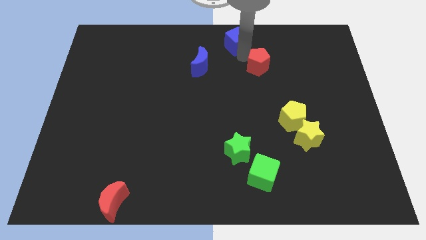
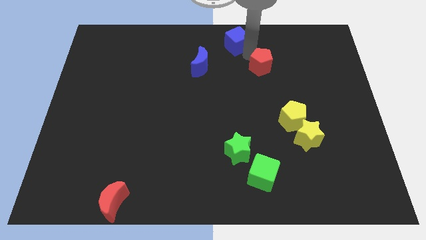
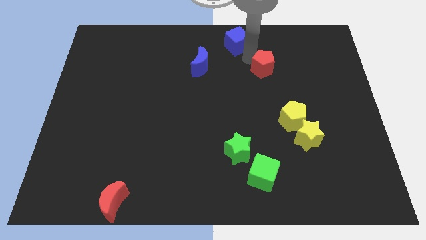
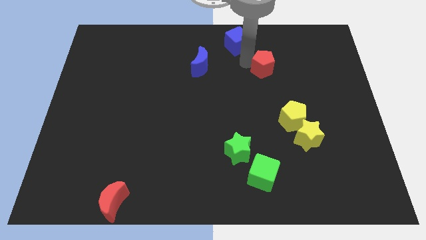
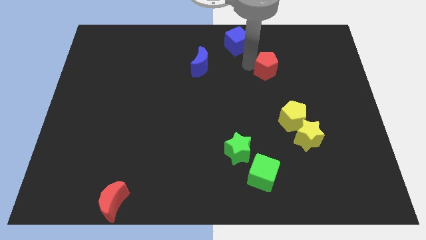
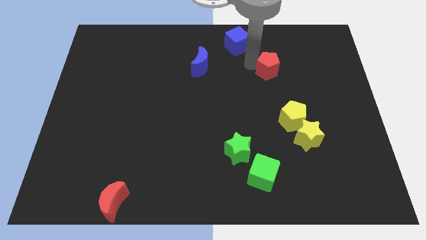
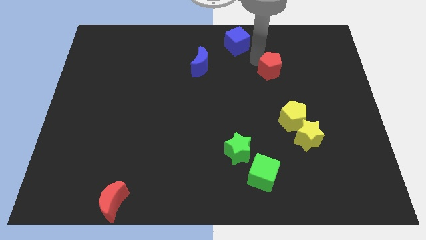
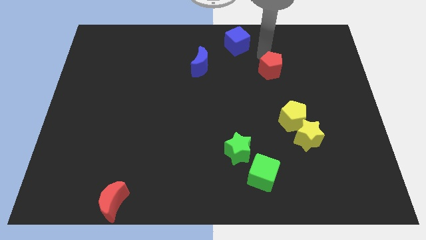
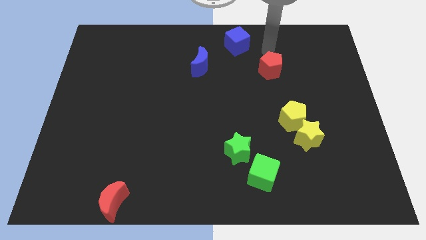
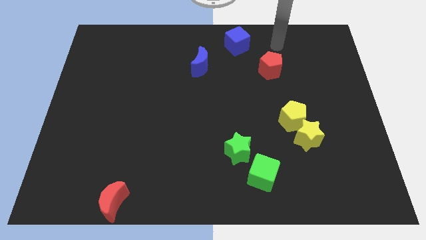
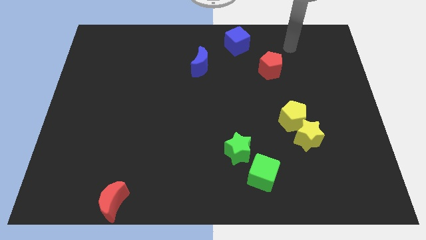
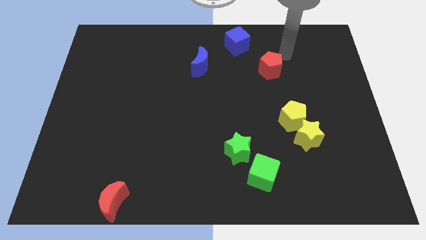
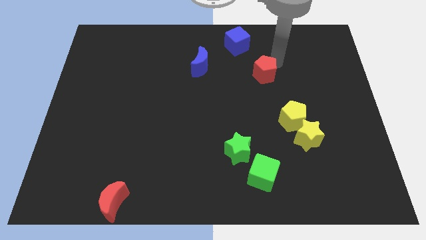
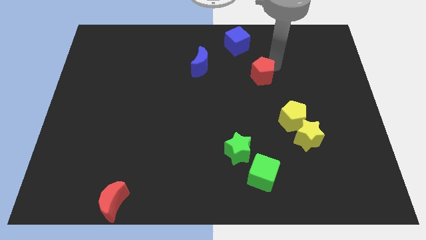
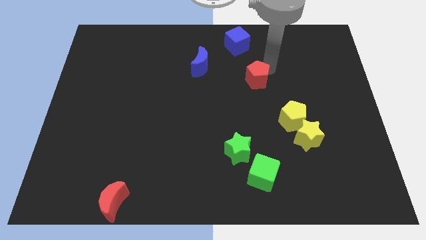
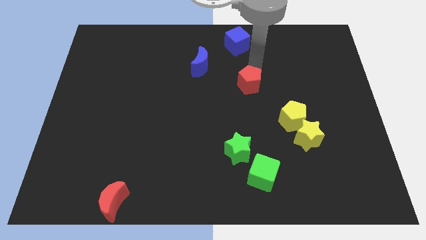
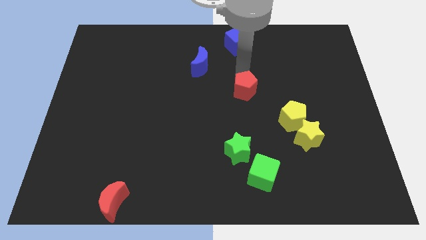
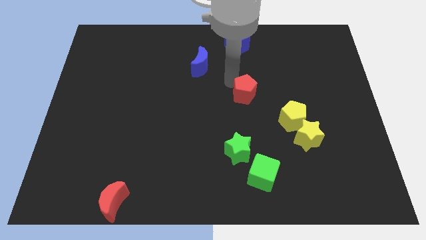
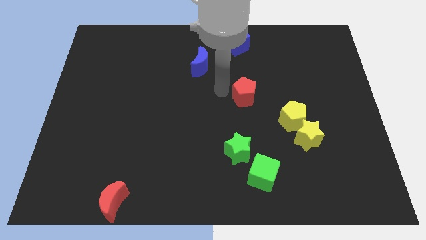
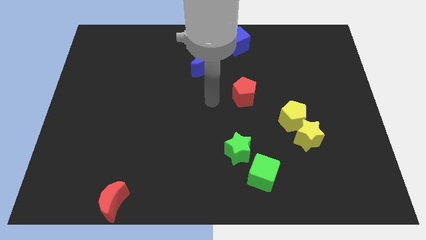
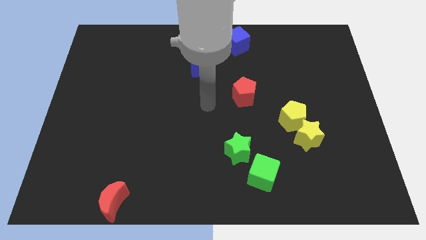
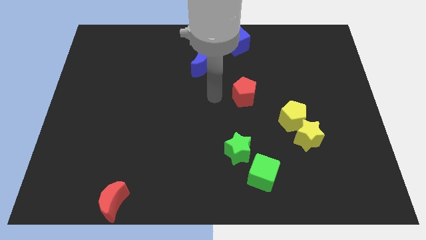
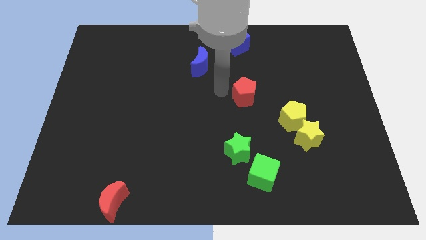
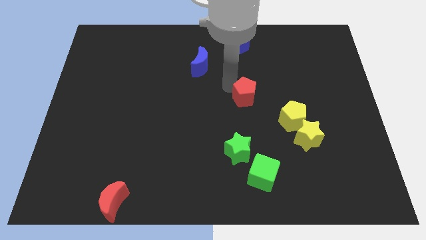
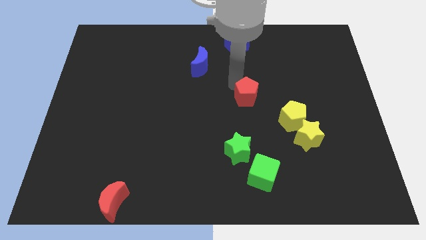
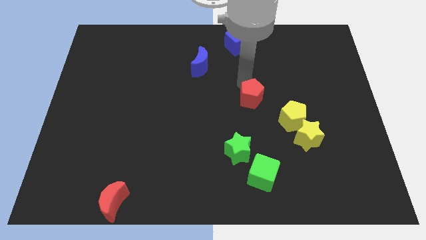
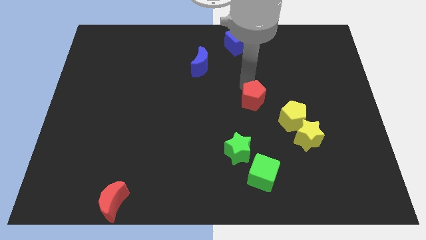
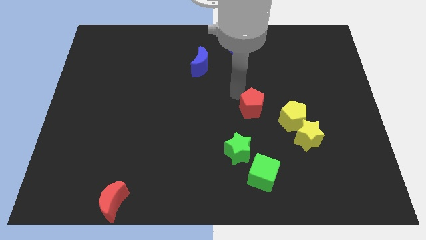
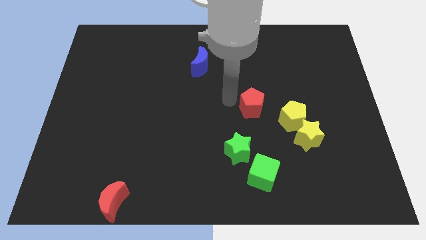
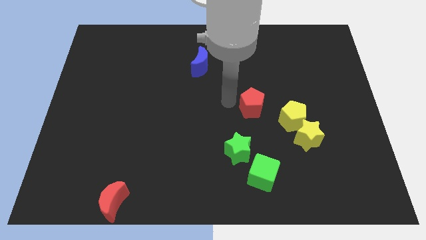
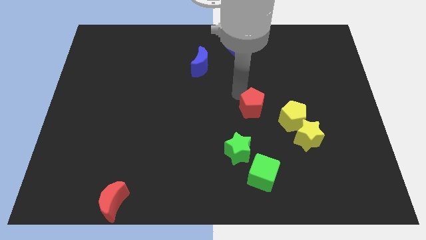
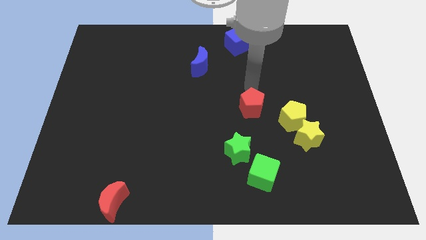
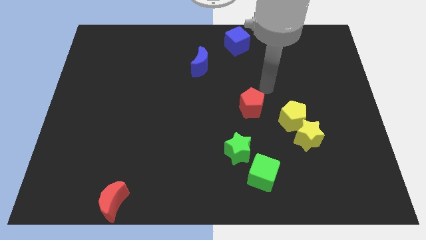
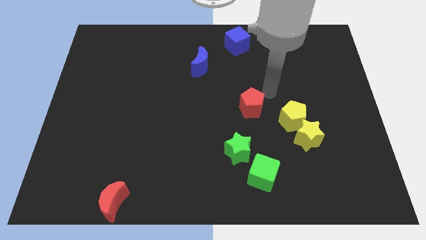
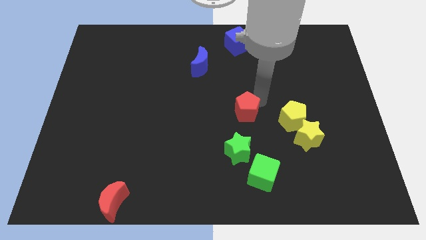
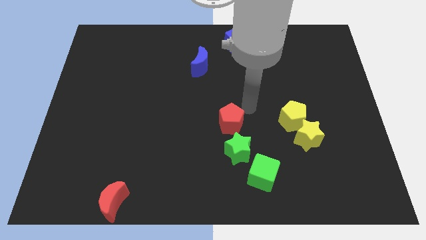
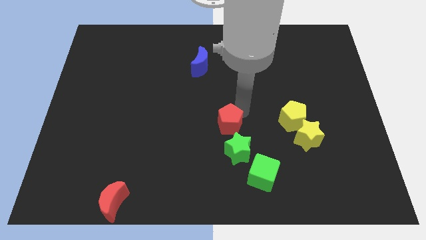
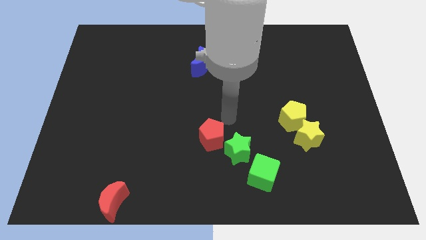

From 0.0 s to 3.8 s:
place the red pentagon diagonally to green star

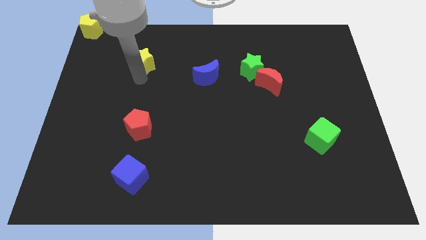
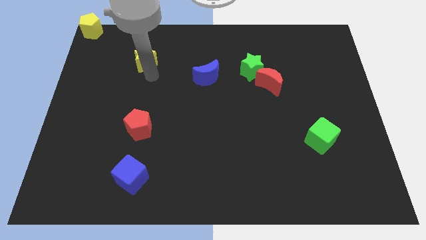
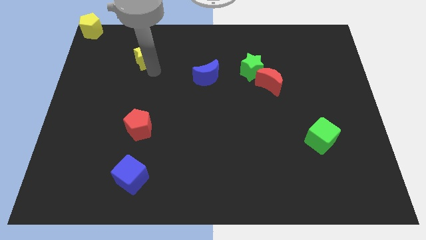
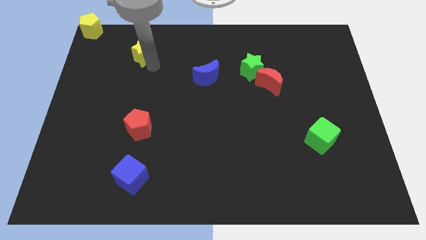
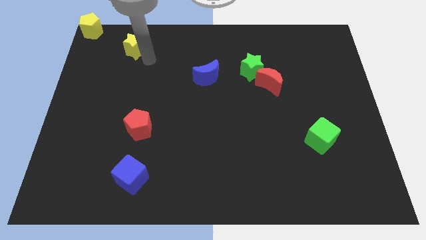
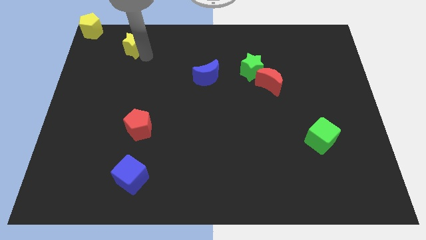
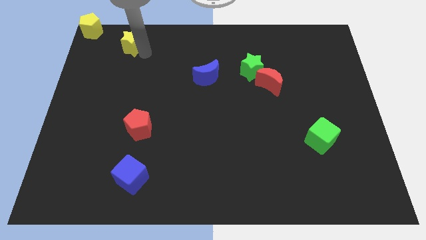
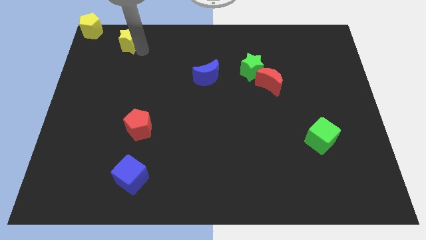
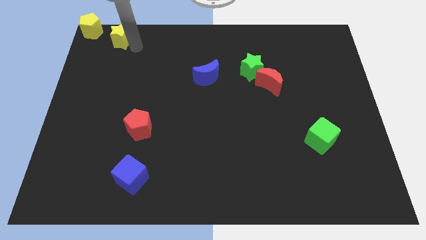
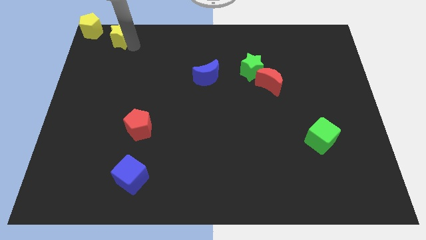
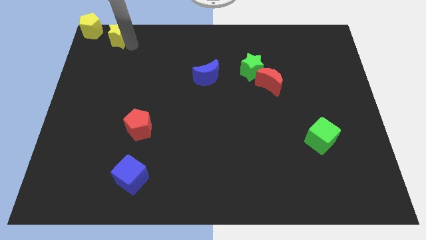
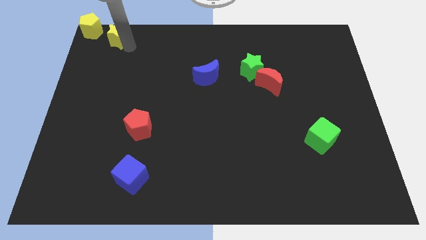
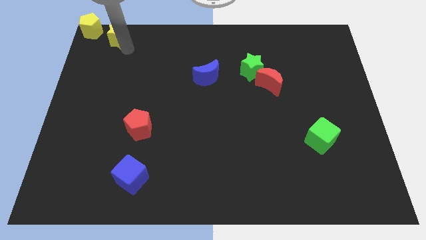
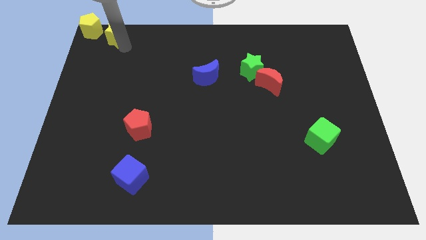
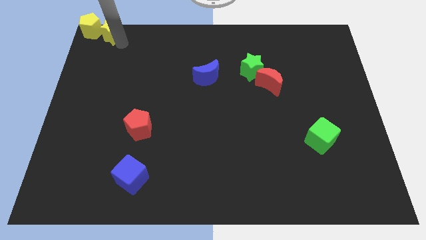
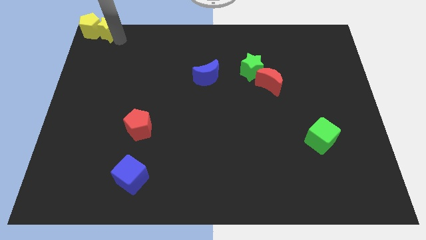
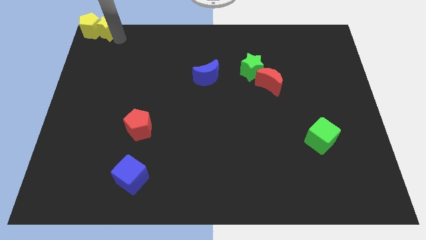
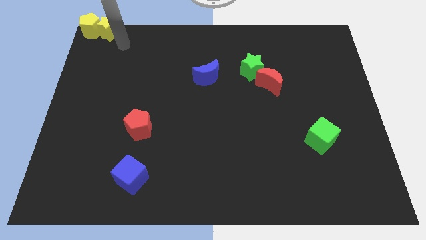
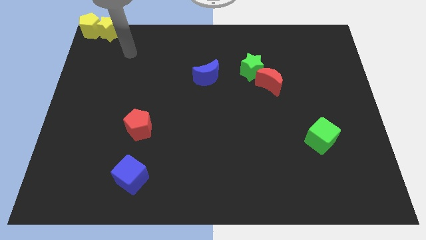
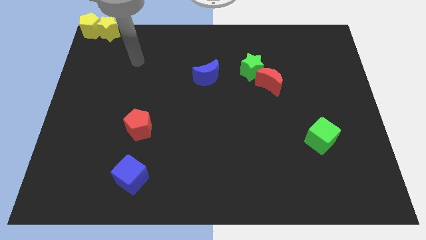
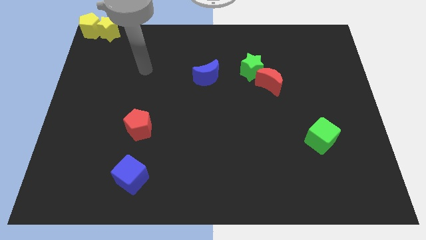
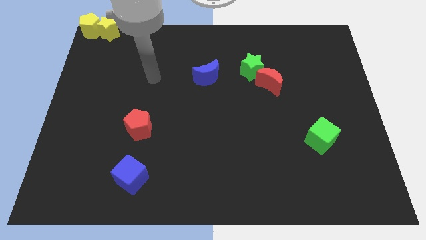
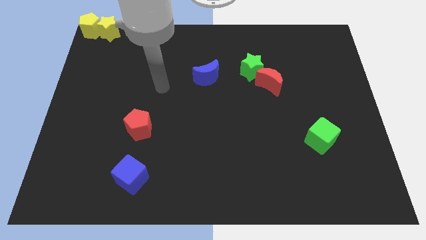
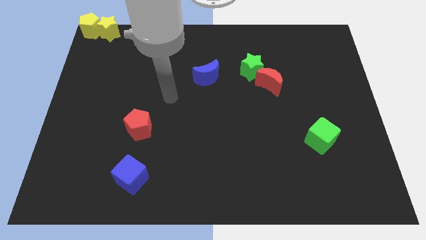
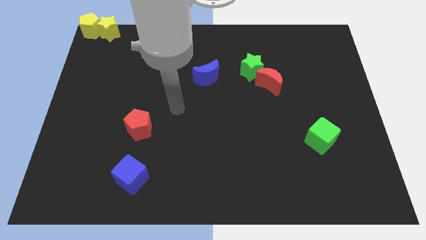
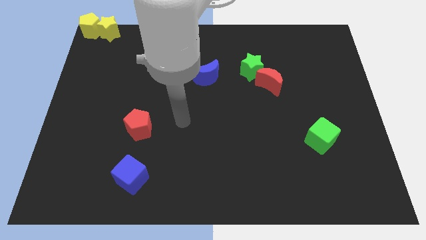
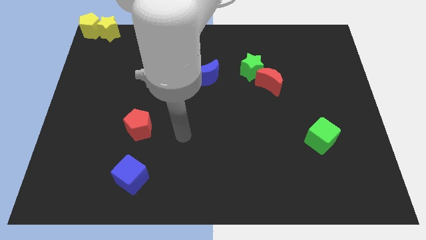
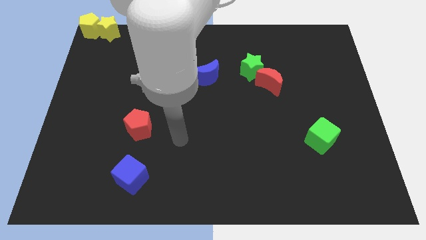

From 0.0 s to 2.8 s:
move yellow star towards yellow pentagon

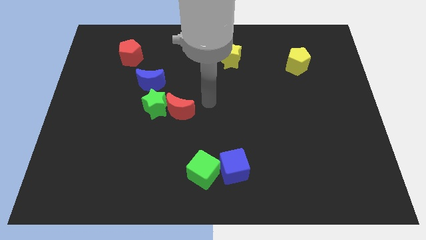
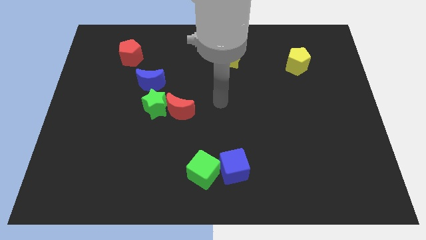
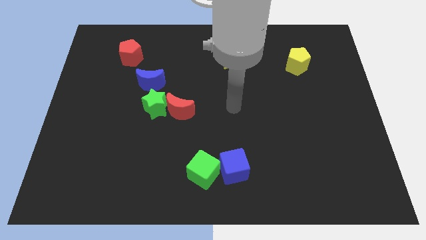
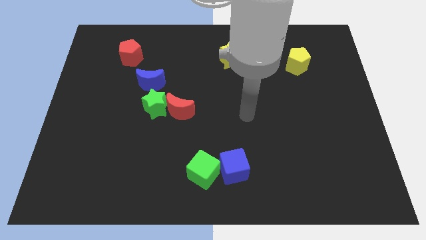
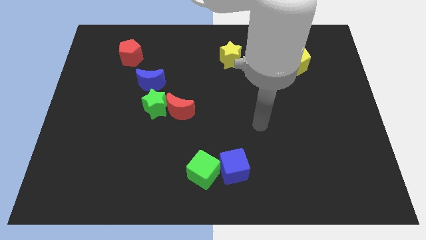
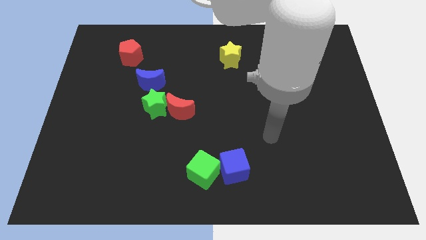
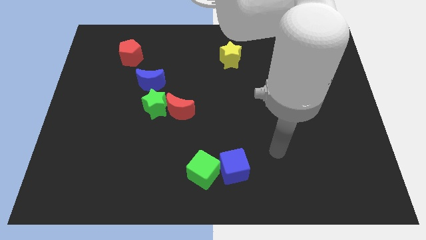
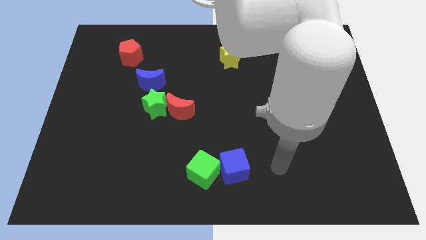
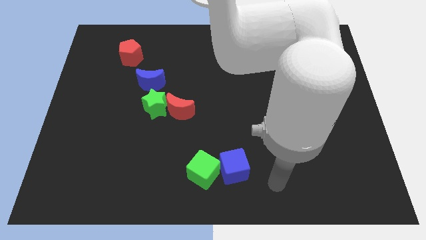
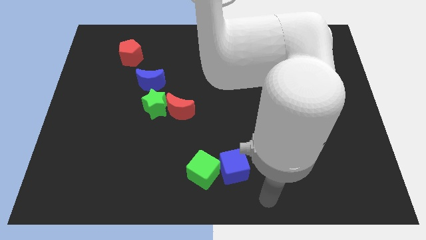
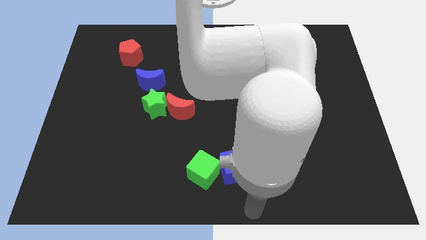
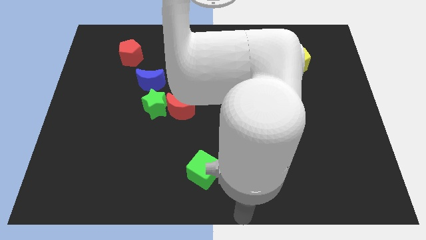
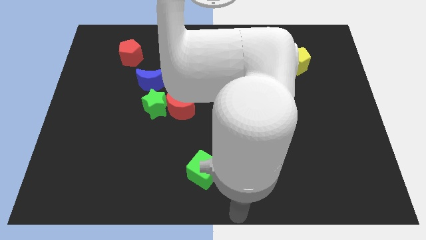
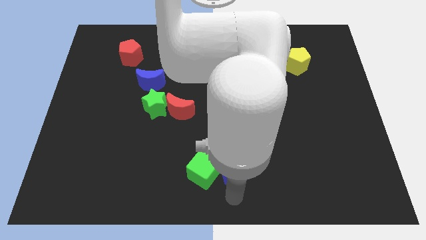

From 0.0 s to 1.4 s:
move the arm below to the blue cube

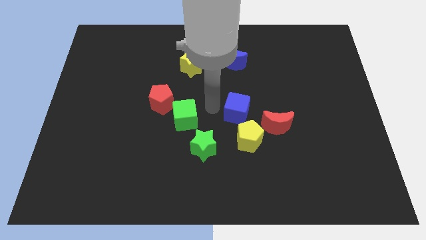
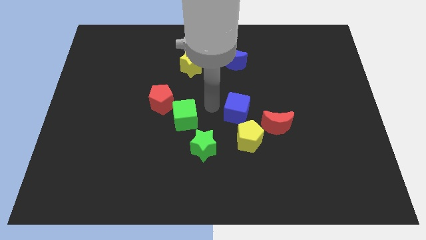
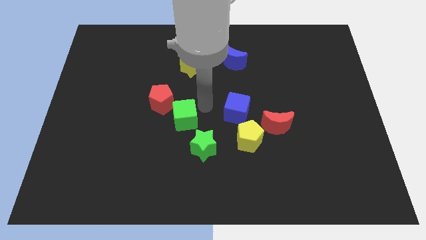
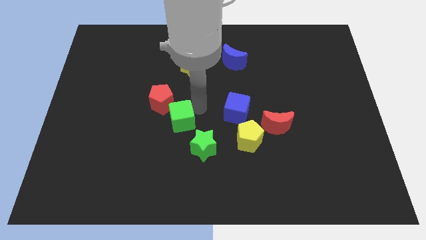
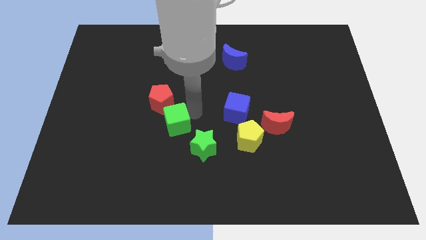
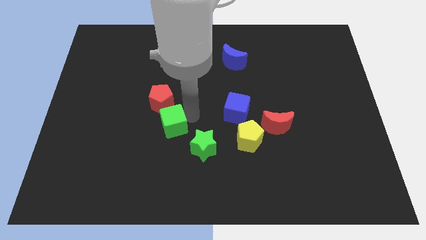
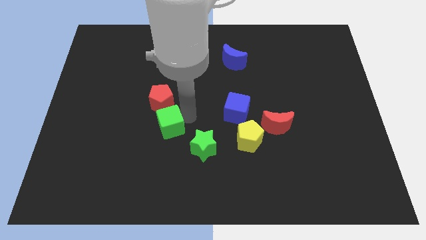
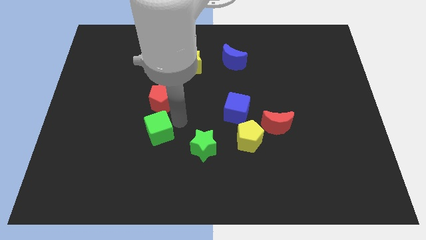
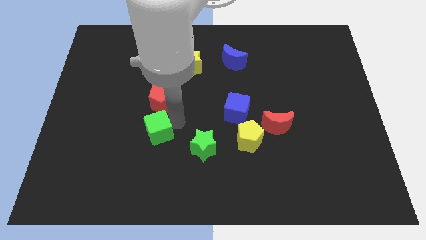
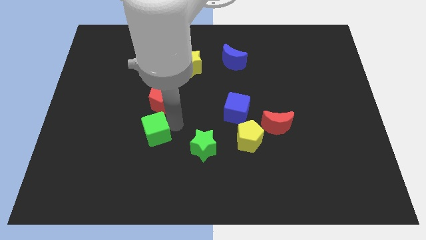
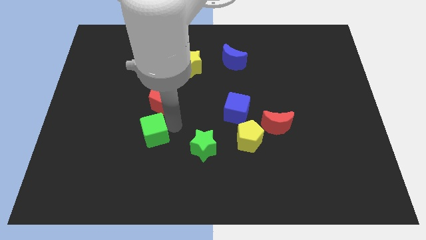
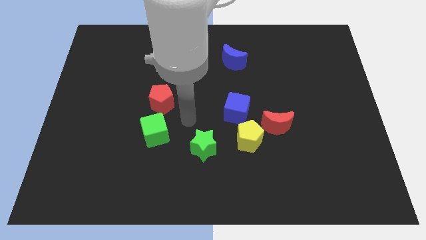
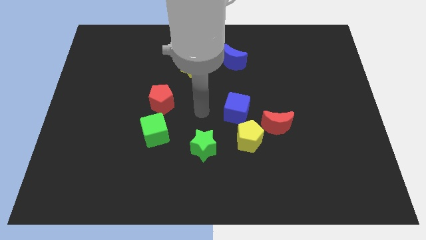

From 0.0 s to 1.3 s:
push the green cube to the bottom of the red pentagon
